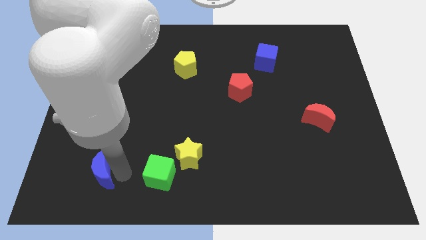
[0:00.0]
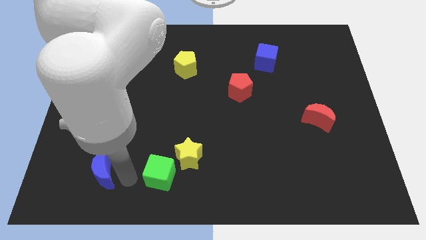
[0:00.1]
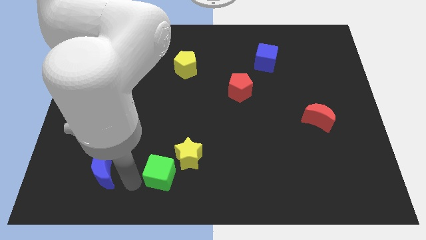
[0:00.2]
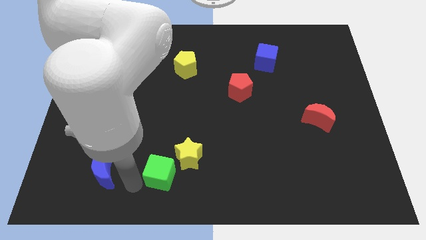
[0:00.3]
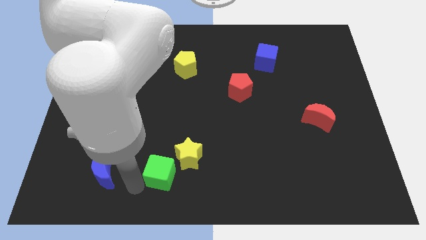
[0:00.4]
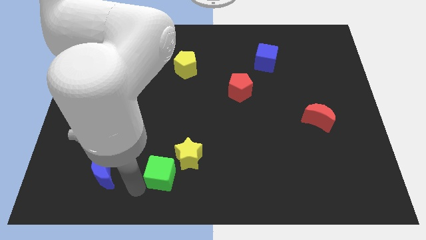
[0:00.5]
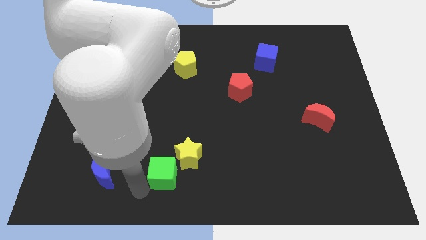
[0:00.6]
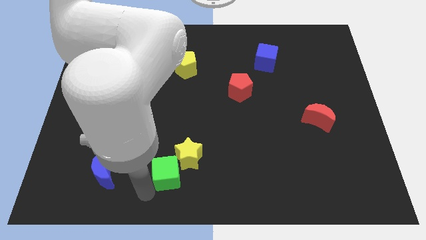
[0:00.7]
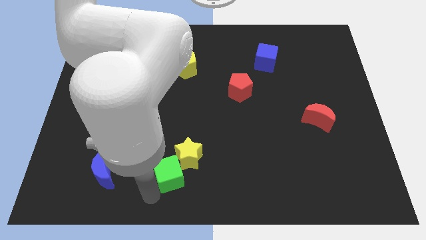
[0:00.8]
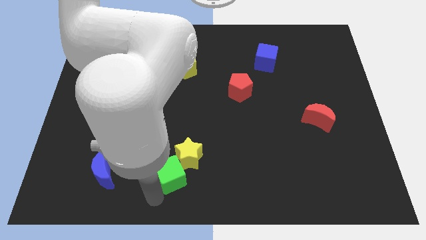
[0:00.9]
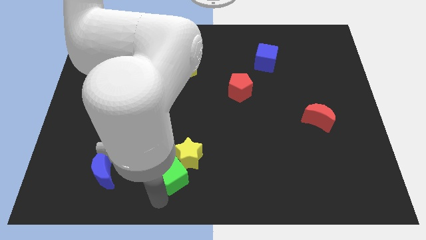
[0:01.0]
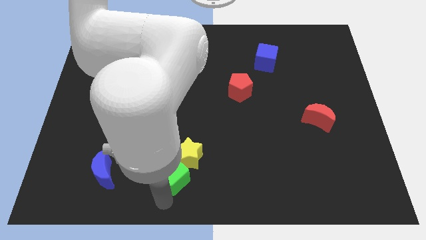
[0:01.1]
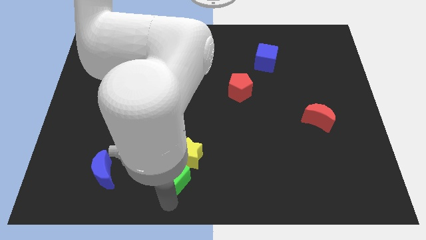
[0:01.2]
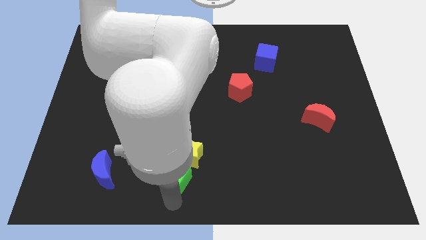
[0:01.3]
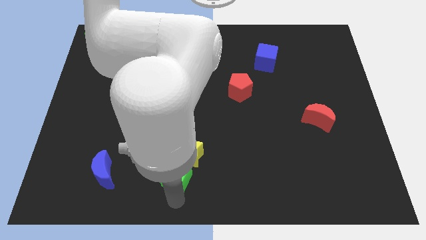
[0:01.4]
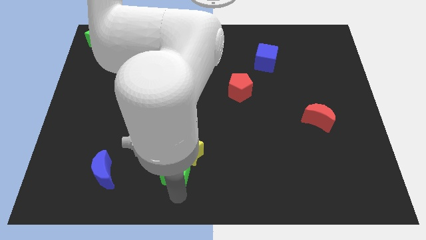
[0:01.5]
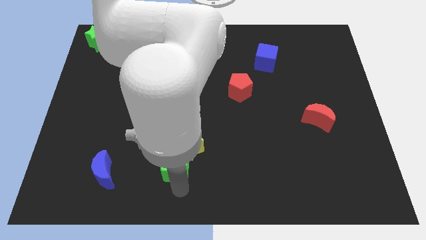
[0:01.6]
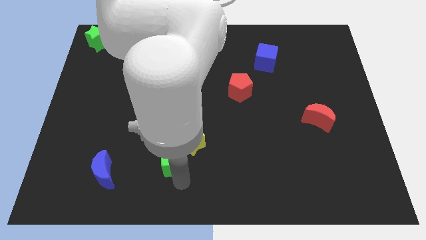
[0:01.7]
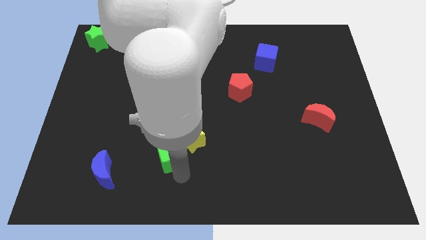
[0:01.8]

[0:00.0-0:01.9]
move the green cube into the yellow star

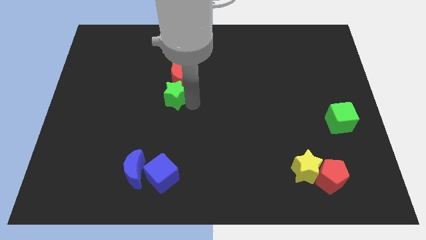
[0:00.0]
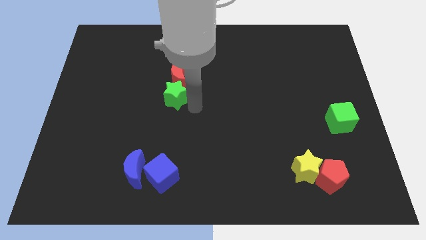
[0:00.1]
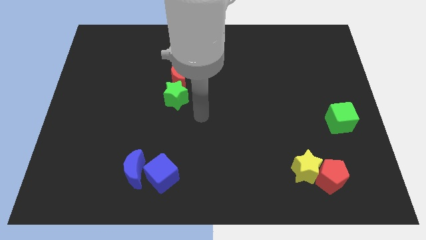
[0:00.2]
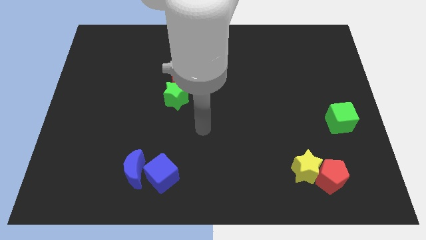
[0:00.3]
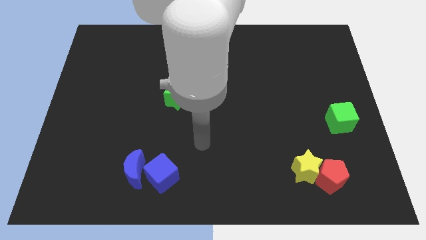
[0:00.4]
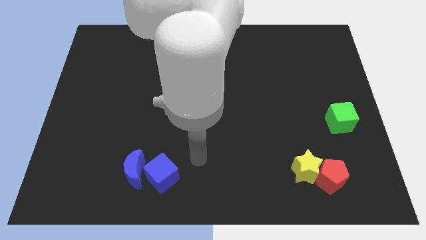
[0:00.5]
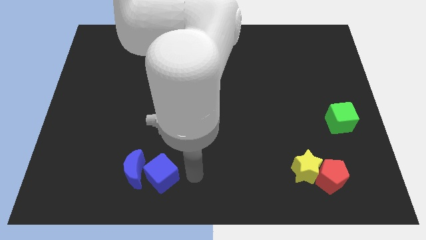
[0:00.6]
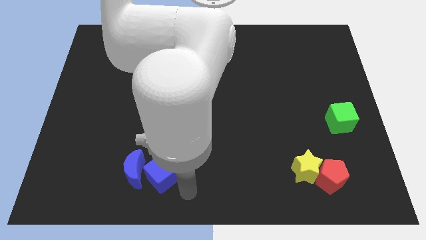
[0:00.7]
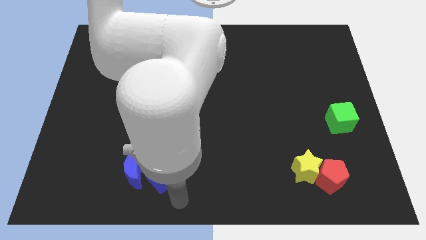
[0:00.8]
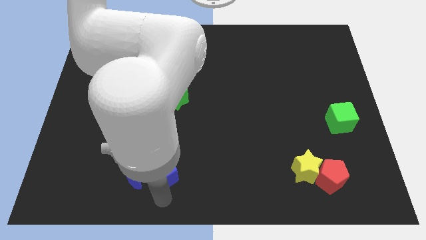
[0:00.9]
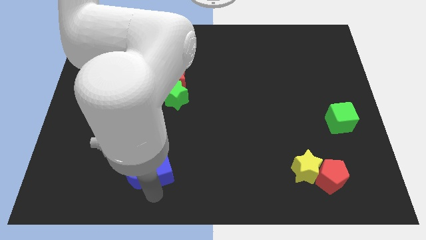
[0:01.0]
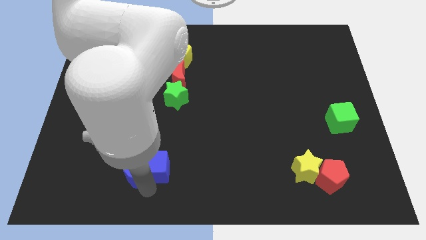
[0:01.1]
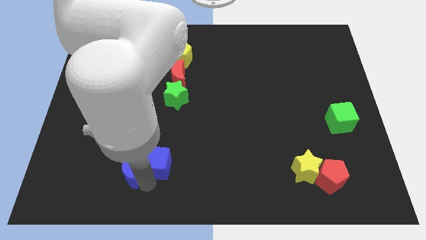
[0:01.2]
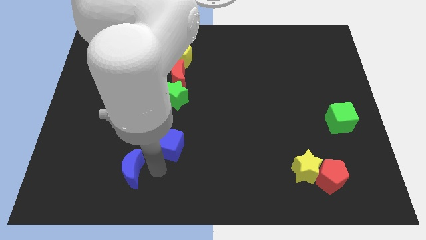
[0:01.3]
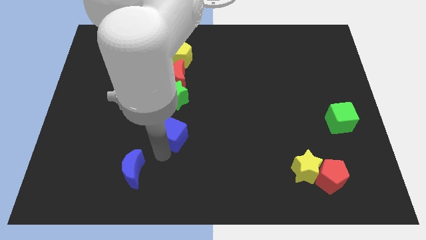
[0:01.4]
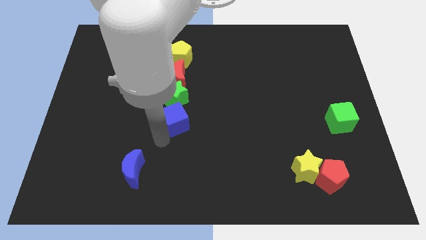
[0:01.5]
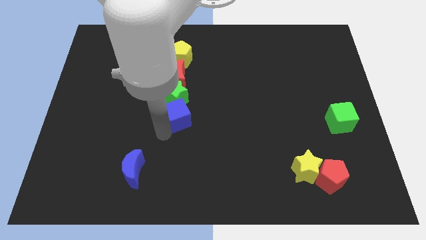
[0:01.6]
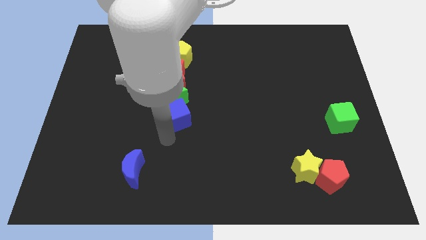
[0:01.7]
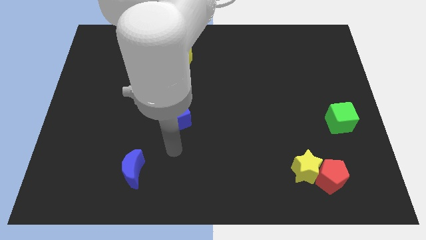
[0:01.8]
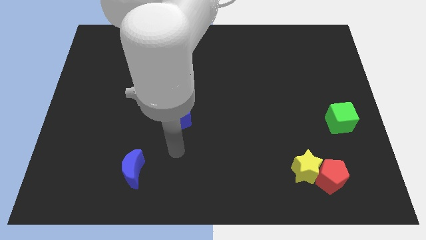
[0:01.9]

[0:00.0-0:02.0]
separate the blue cube towards bottom of green star

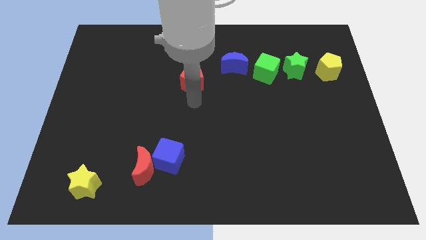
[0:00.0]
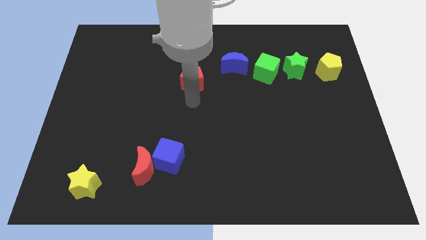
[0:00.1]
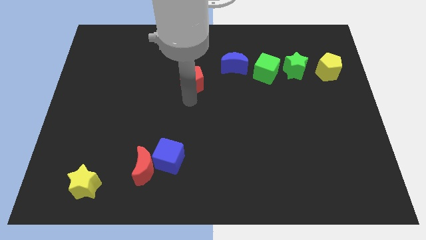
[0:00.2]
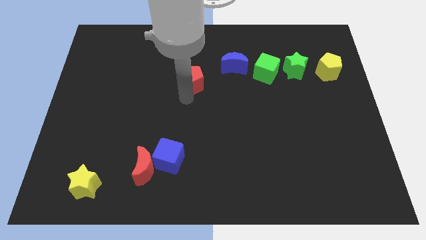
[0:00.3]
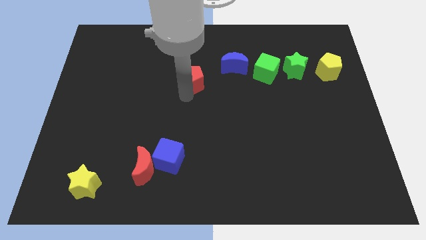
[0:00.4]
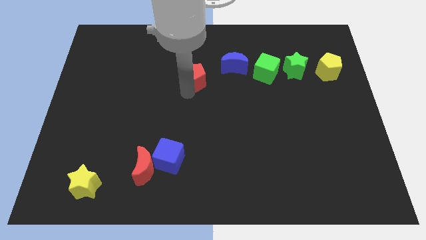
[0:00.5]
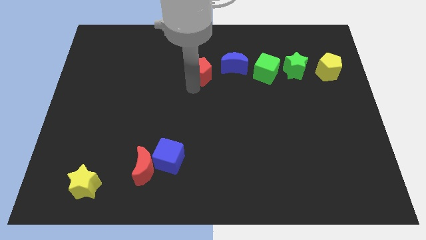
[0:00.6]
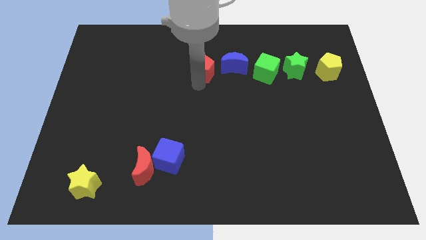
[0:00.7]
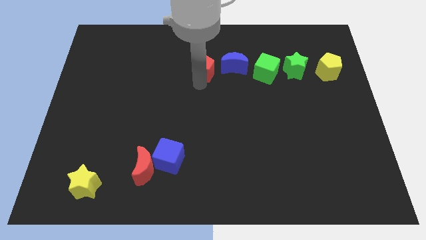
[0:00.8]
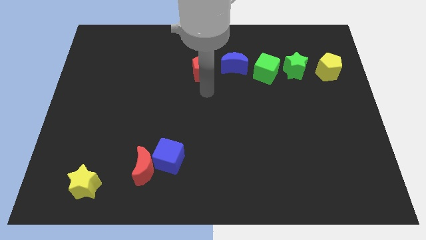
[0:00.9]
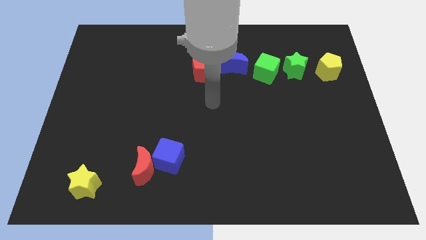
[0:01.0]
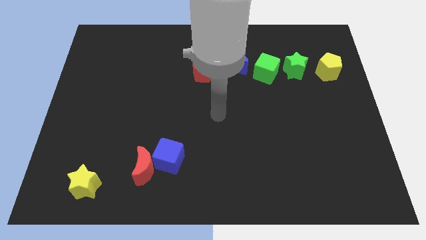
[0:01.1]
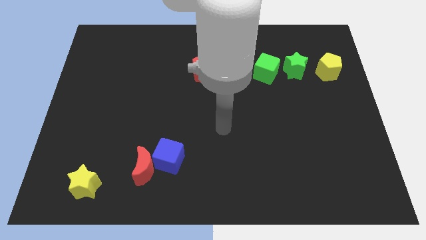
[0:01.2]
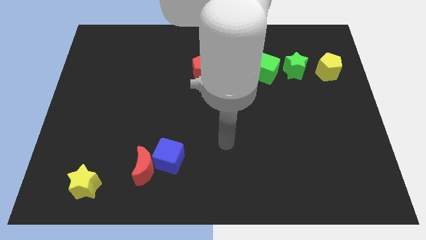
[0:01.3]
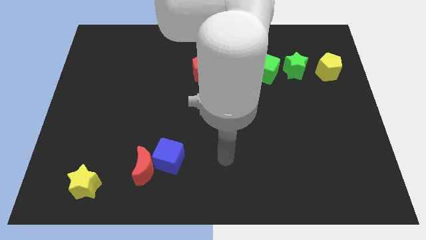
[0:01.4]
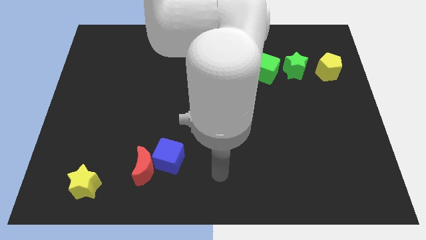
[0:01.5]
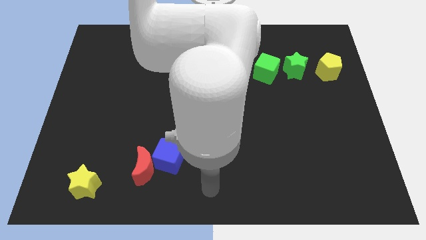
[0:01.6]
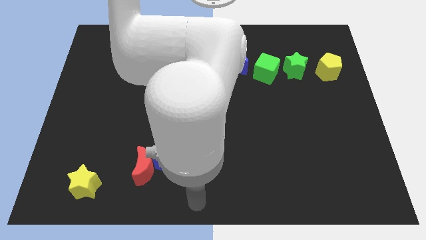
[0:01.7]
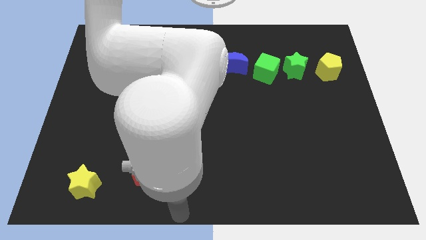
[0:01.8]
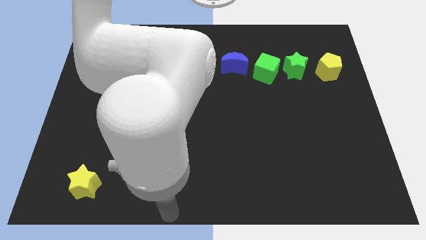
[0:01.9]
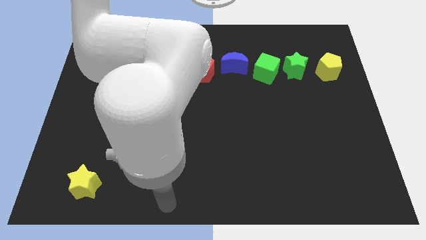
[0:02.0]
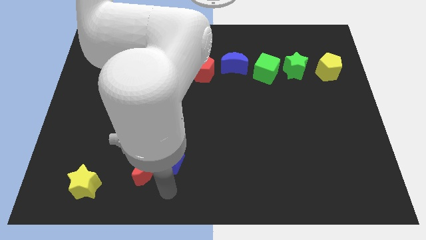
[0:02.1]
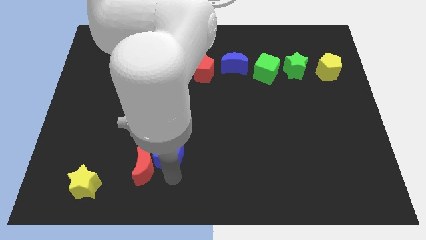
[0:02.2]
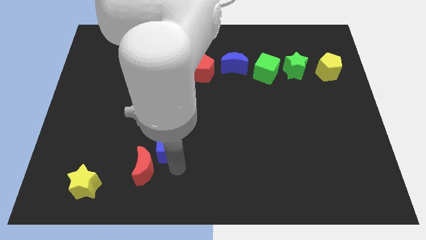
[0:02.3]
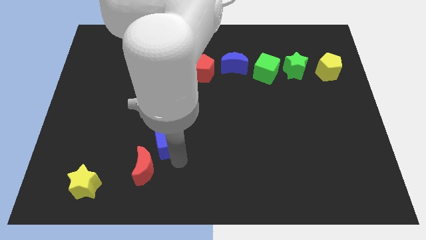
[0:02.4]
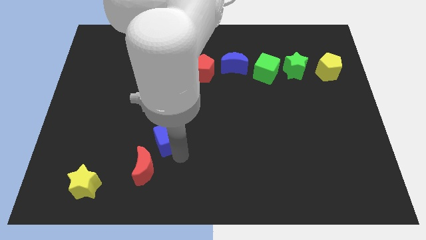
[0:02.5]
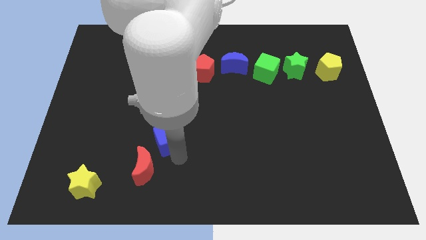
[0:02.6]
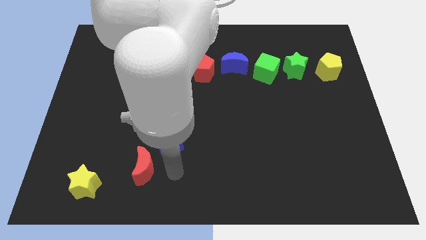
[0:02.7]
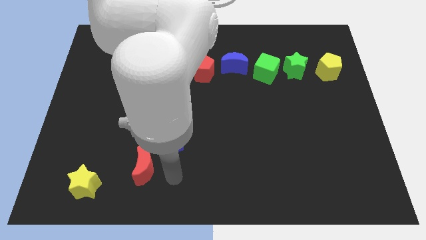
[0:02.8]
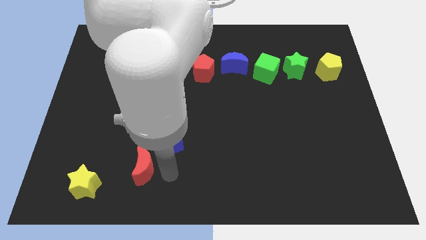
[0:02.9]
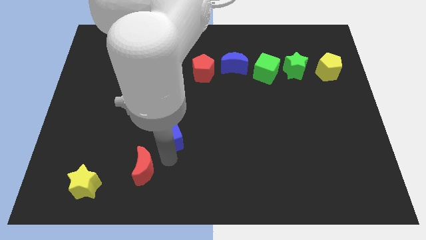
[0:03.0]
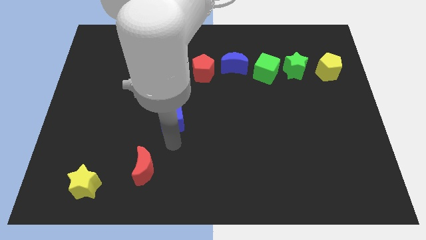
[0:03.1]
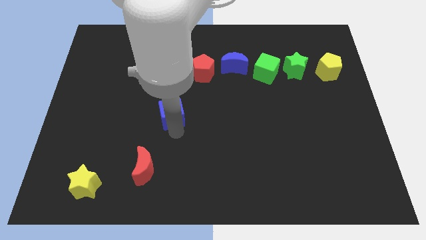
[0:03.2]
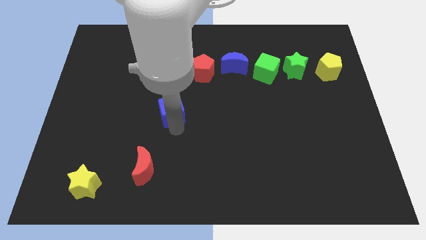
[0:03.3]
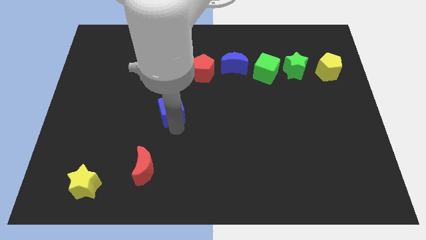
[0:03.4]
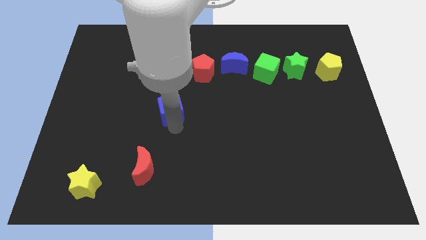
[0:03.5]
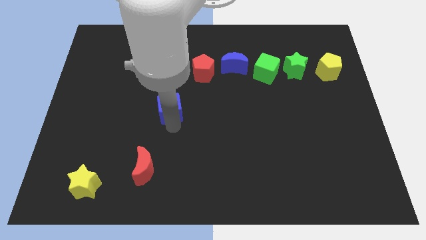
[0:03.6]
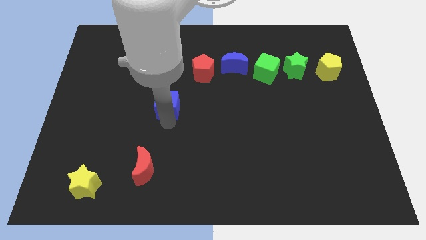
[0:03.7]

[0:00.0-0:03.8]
move the blue cube diagonally below the red pentagon

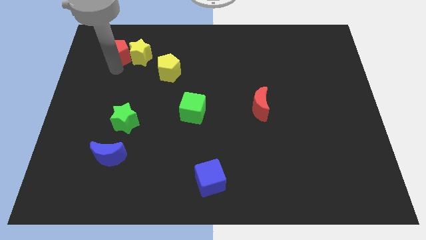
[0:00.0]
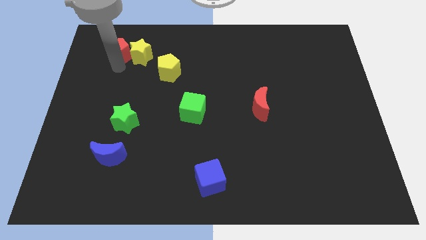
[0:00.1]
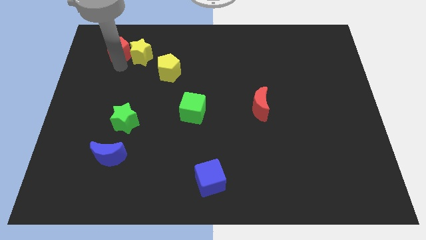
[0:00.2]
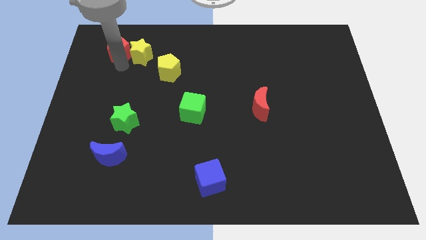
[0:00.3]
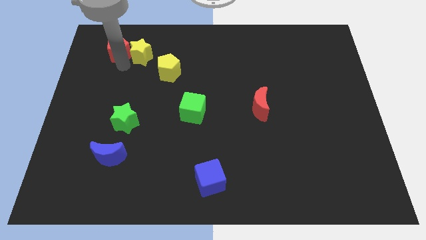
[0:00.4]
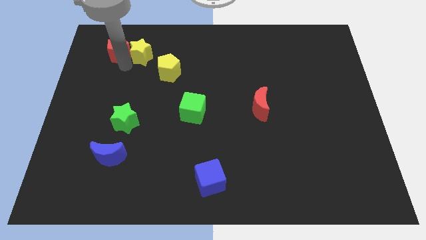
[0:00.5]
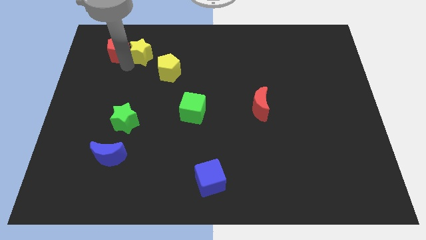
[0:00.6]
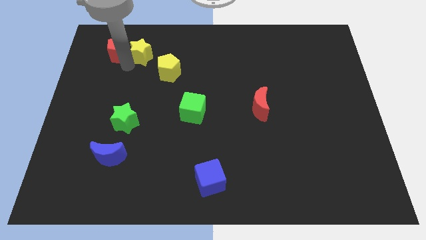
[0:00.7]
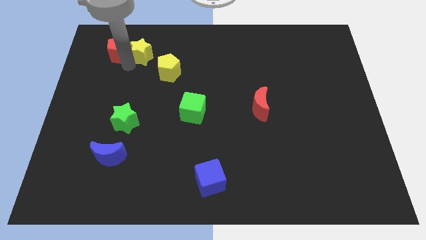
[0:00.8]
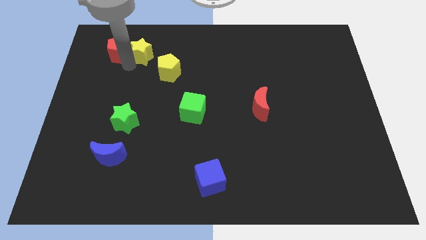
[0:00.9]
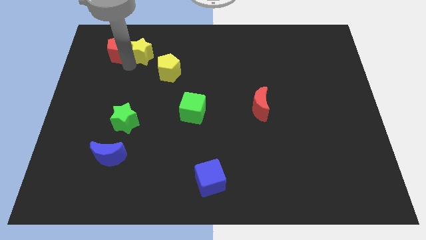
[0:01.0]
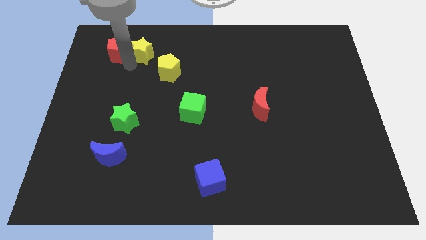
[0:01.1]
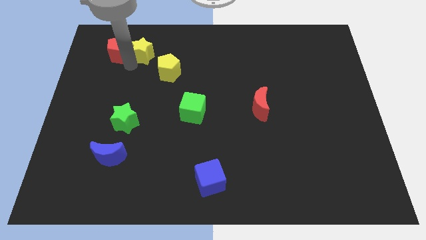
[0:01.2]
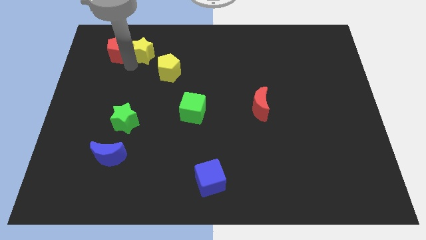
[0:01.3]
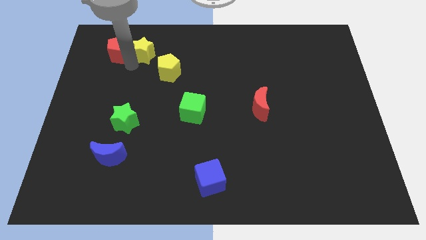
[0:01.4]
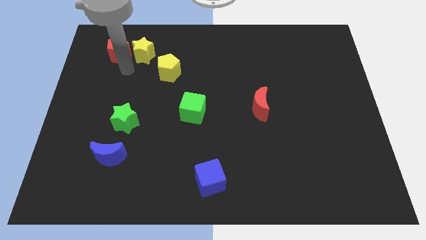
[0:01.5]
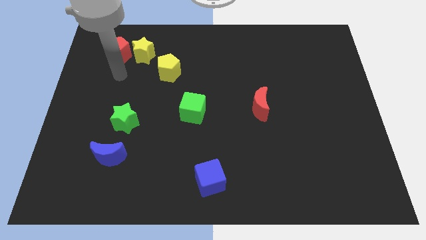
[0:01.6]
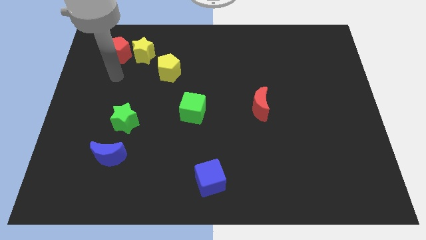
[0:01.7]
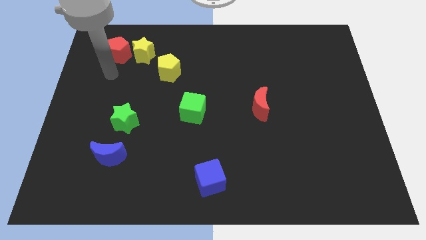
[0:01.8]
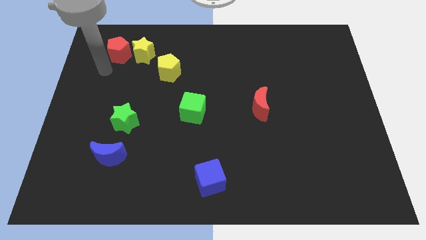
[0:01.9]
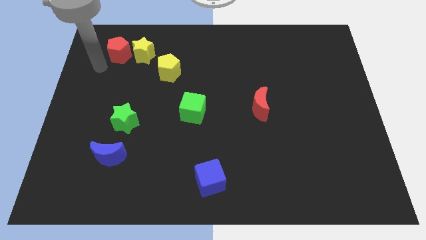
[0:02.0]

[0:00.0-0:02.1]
slightly push the yellow star to the right of red pentagon
